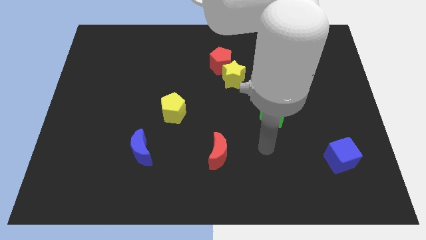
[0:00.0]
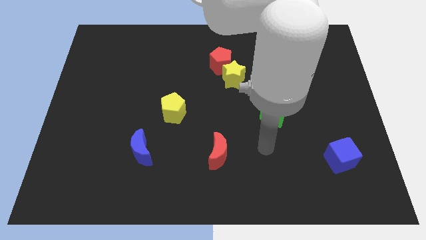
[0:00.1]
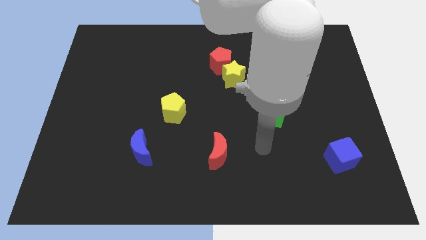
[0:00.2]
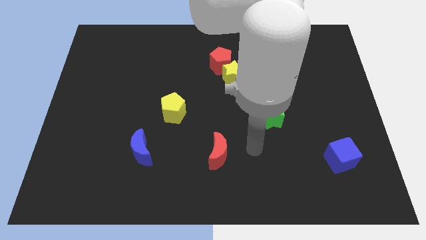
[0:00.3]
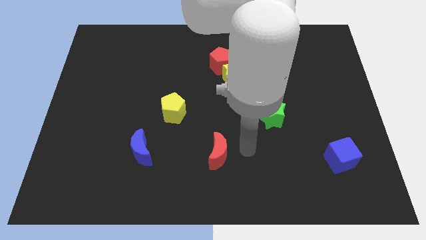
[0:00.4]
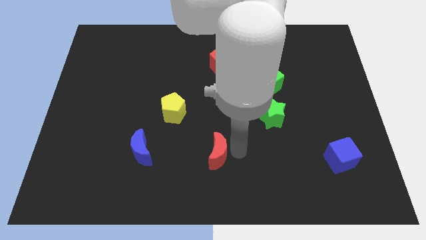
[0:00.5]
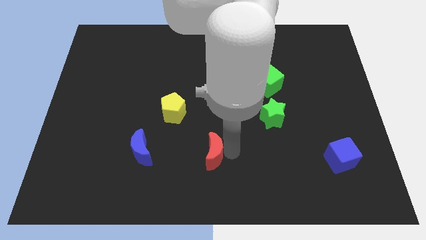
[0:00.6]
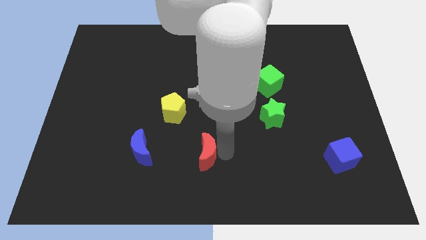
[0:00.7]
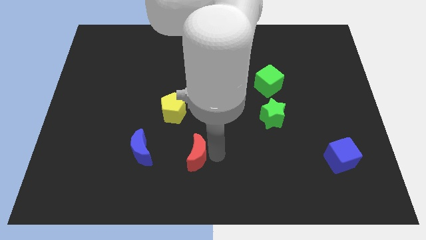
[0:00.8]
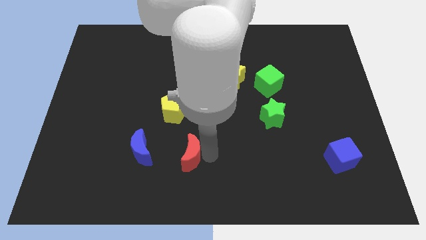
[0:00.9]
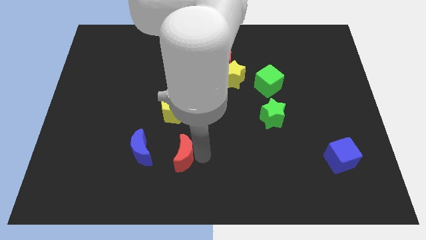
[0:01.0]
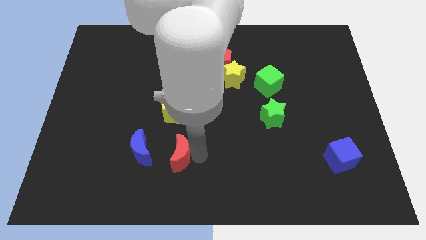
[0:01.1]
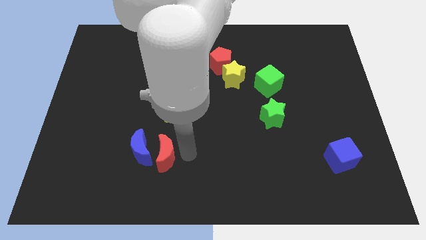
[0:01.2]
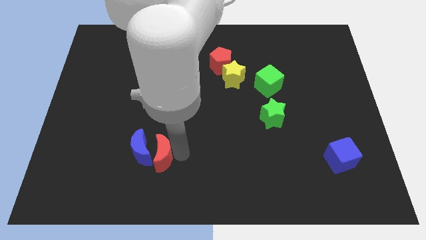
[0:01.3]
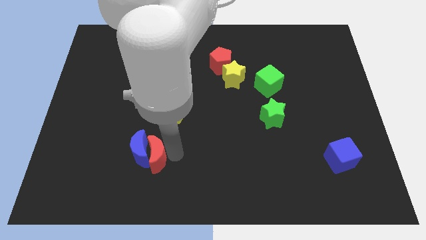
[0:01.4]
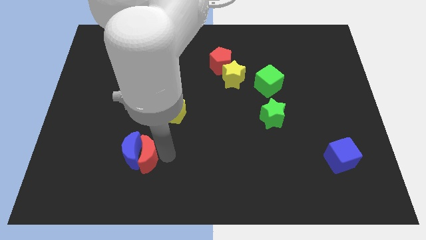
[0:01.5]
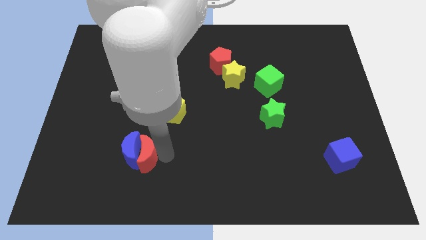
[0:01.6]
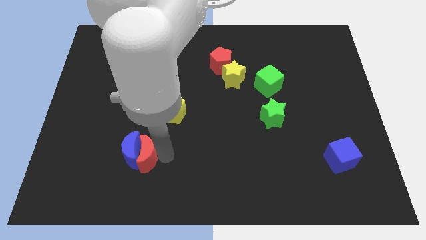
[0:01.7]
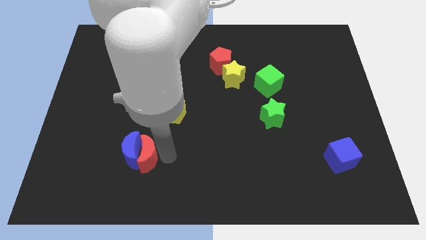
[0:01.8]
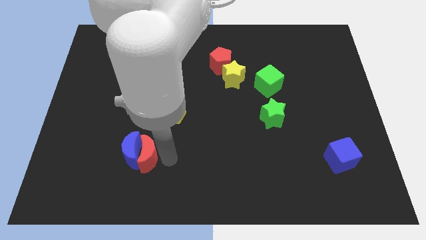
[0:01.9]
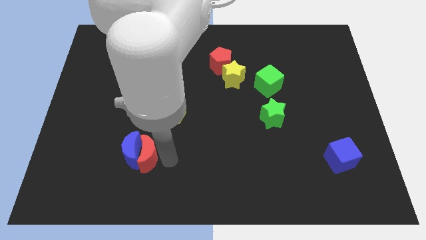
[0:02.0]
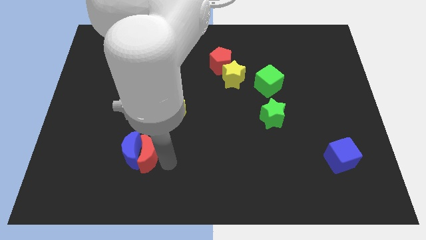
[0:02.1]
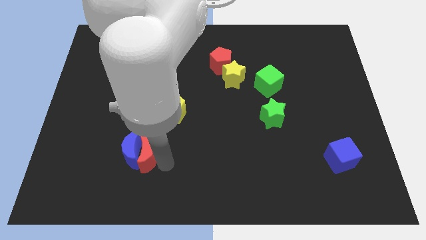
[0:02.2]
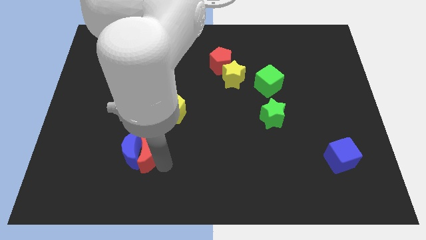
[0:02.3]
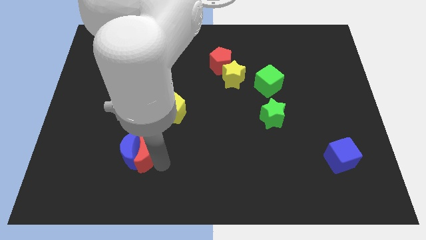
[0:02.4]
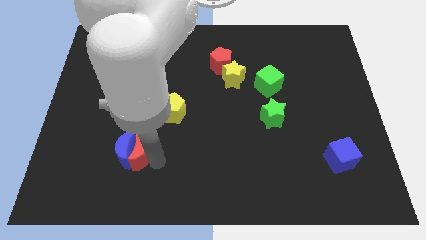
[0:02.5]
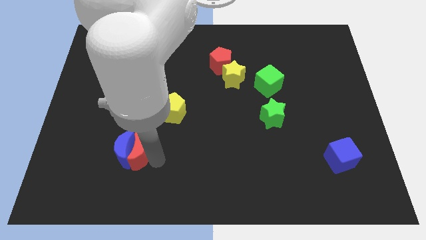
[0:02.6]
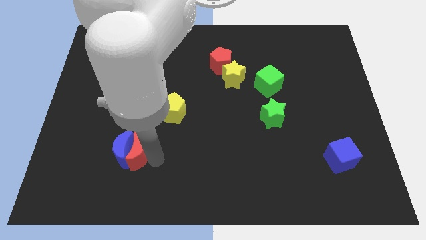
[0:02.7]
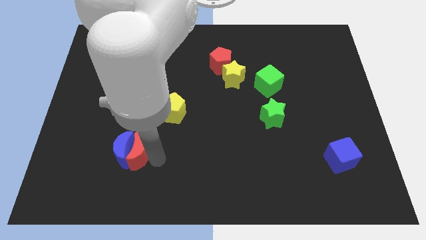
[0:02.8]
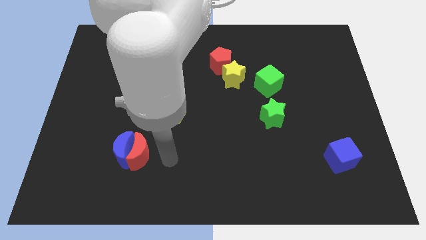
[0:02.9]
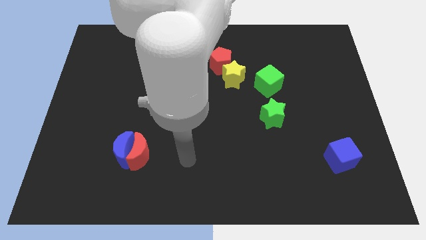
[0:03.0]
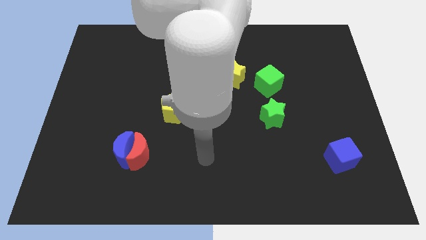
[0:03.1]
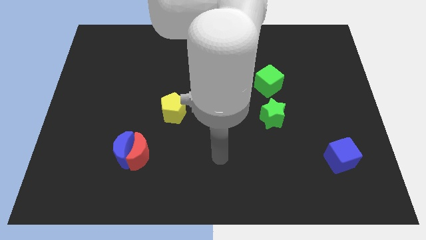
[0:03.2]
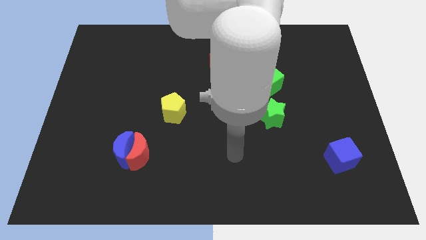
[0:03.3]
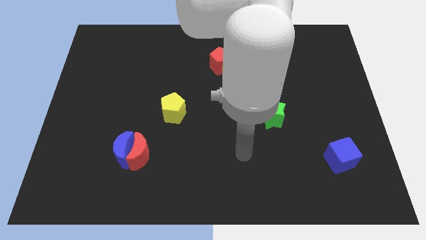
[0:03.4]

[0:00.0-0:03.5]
move the red crescent into the blue crescent

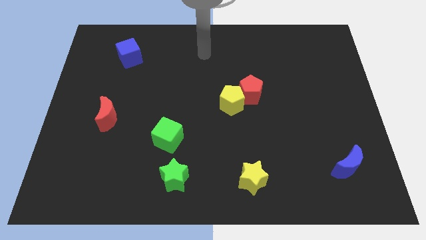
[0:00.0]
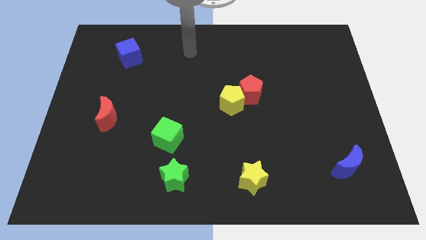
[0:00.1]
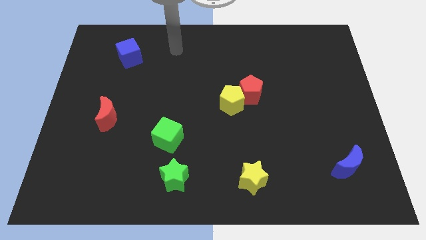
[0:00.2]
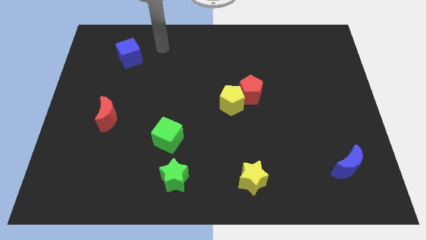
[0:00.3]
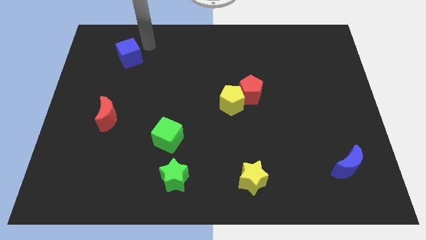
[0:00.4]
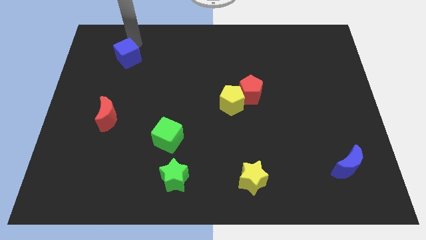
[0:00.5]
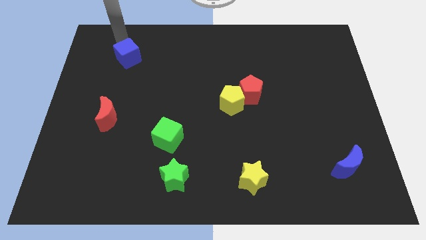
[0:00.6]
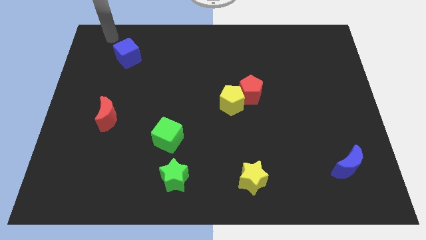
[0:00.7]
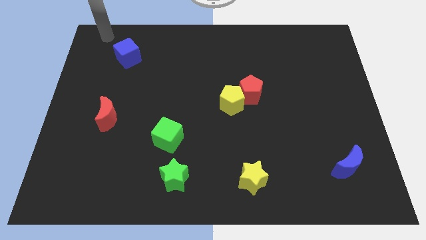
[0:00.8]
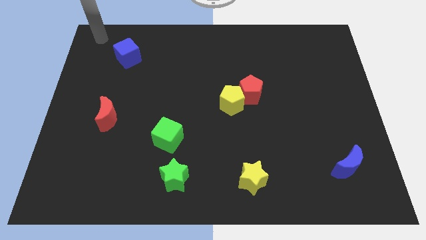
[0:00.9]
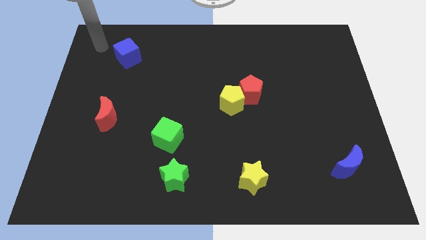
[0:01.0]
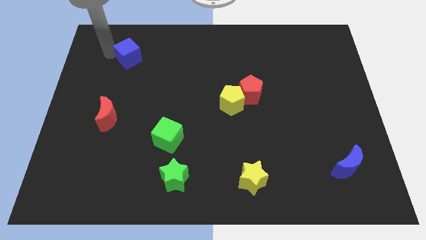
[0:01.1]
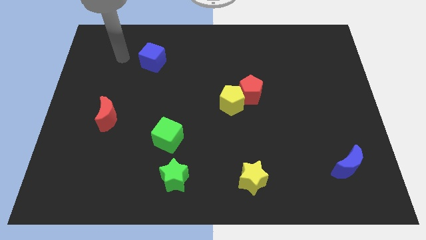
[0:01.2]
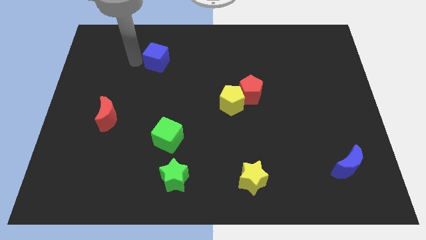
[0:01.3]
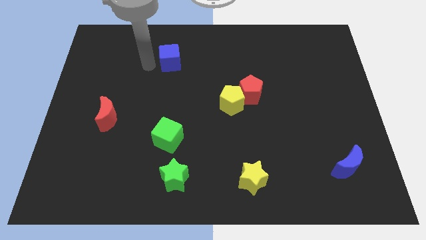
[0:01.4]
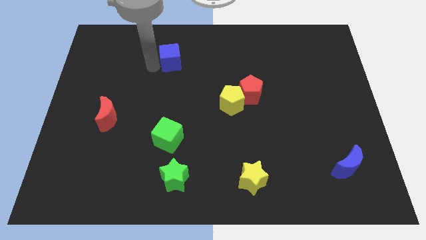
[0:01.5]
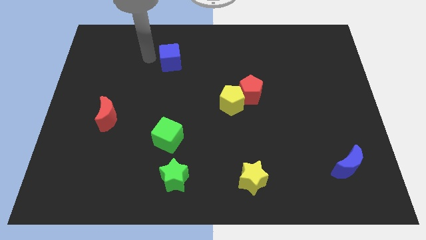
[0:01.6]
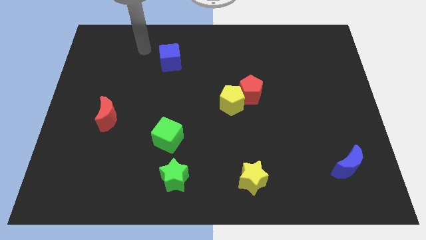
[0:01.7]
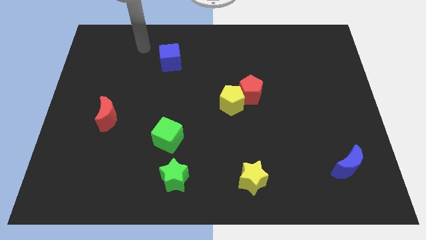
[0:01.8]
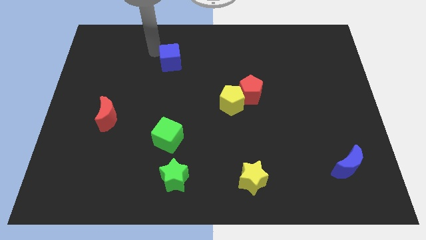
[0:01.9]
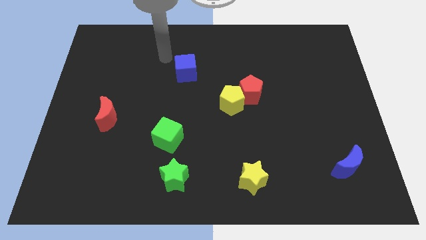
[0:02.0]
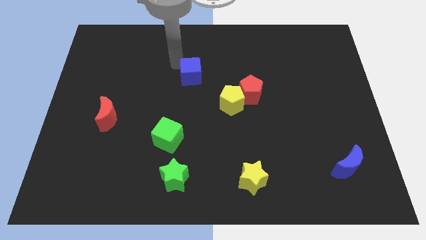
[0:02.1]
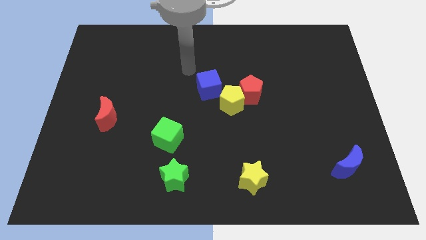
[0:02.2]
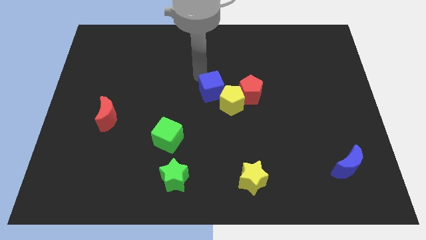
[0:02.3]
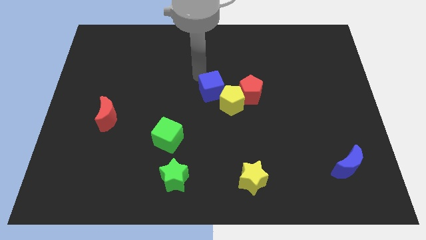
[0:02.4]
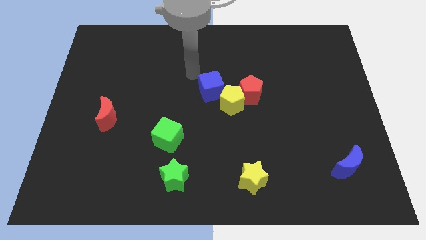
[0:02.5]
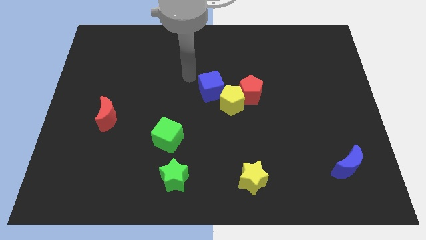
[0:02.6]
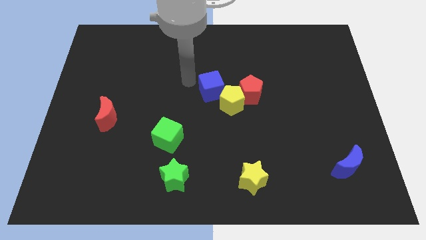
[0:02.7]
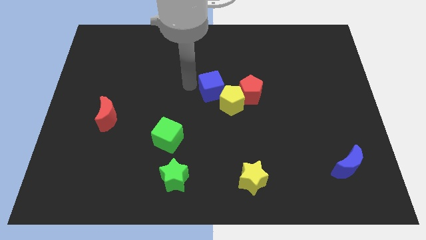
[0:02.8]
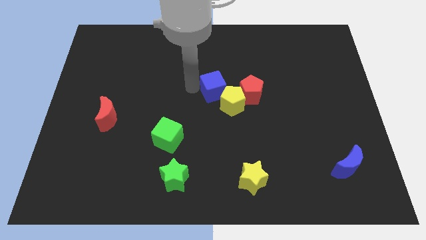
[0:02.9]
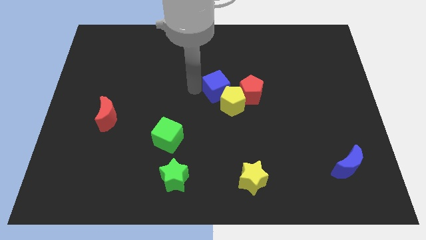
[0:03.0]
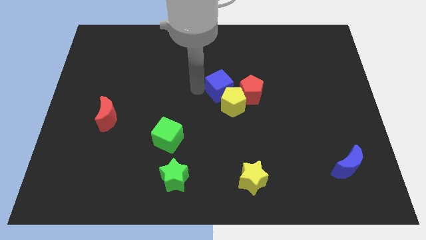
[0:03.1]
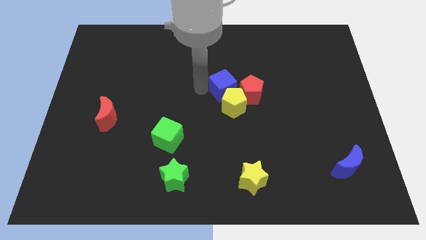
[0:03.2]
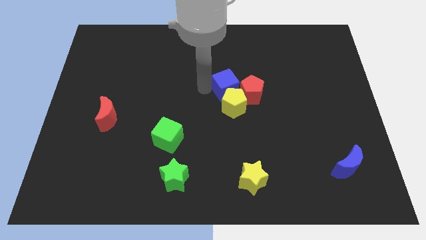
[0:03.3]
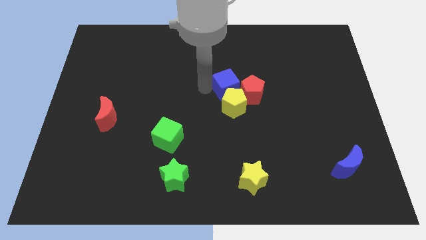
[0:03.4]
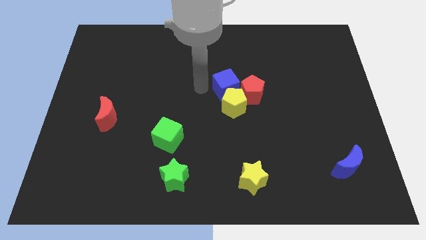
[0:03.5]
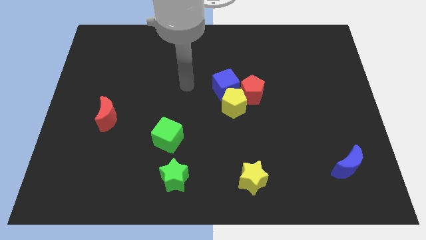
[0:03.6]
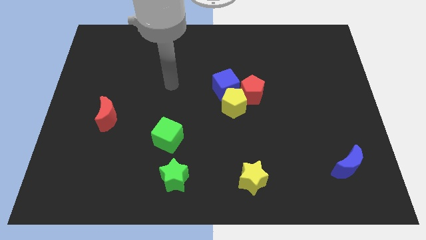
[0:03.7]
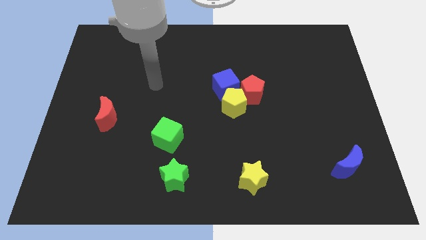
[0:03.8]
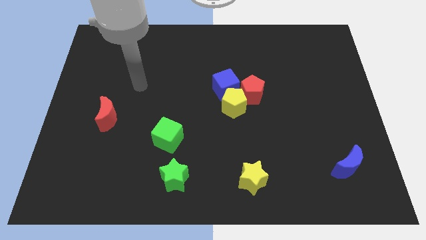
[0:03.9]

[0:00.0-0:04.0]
push the blue cube to the top of the yellow pentagon

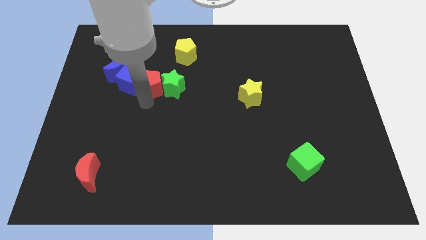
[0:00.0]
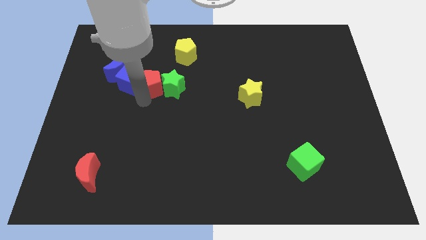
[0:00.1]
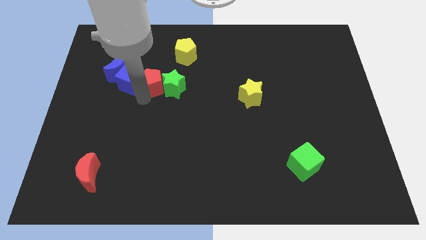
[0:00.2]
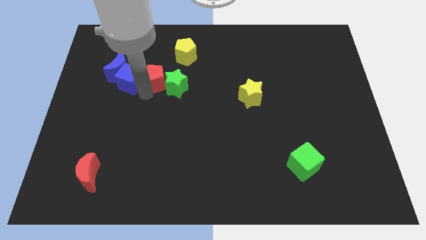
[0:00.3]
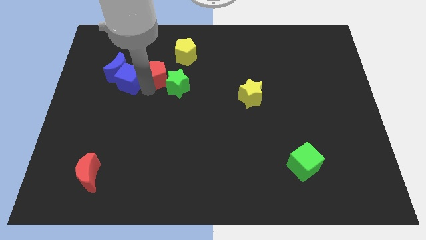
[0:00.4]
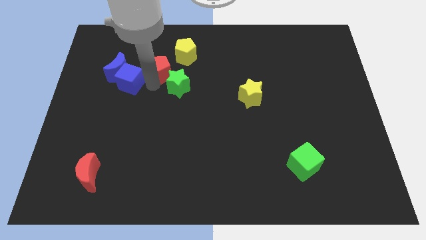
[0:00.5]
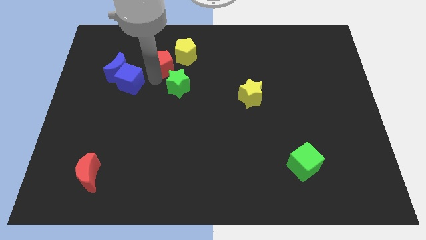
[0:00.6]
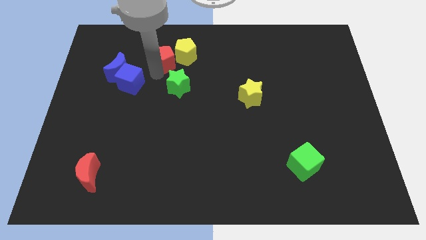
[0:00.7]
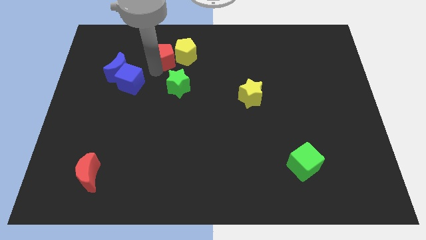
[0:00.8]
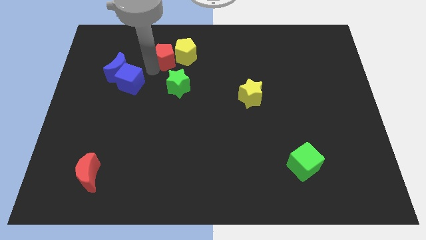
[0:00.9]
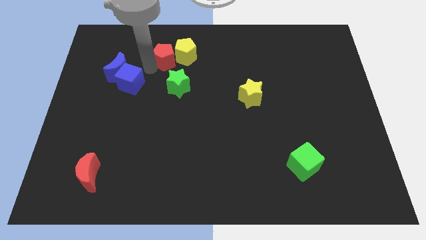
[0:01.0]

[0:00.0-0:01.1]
slide the red pentagon close to the yellow pentagon

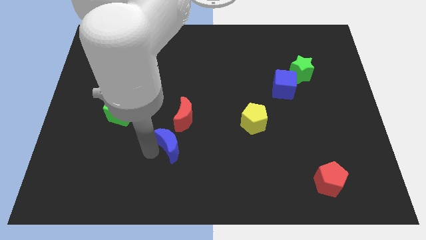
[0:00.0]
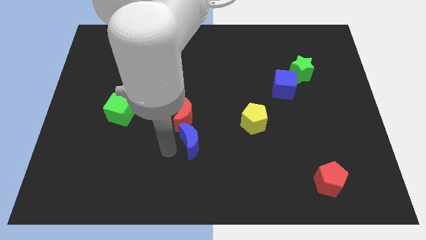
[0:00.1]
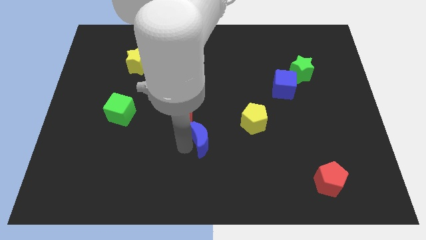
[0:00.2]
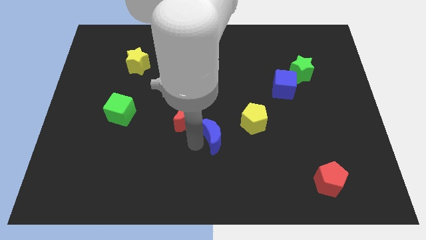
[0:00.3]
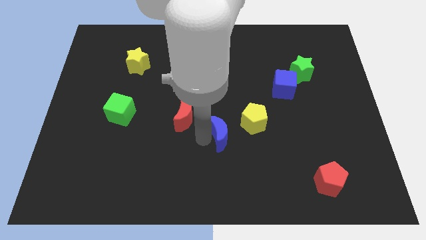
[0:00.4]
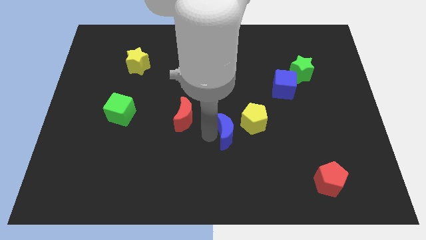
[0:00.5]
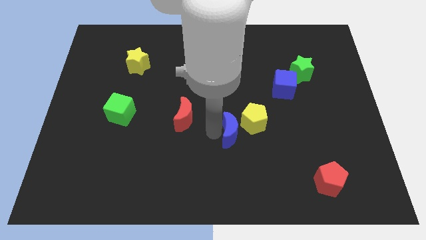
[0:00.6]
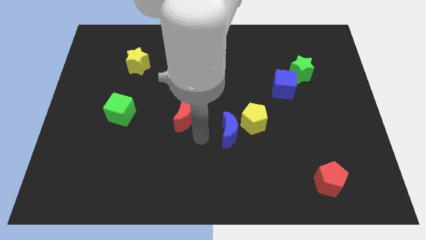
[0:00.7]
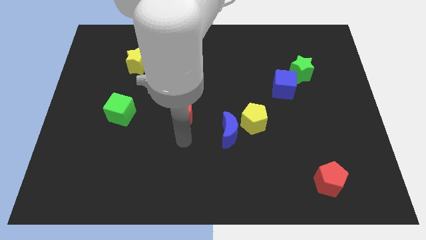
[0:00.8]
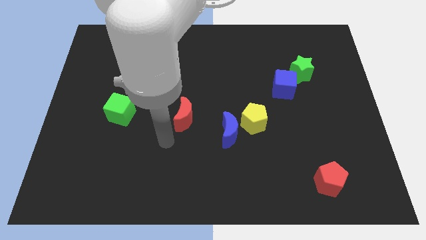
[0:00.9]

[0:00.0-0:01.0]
move the blue moon towards the yellow pentagon
